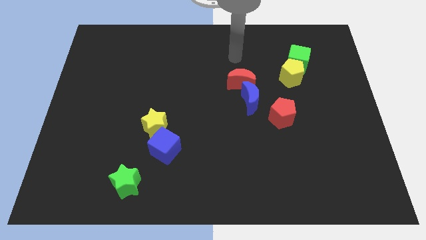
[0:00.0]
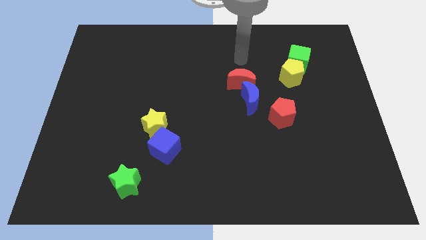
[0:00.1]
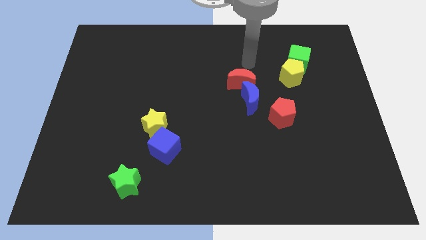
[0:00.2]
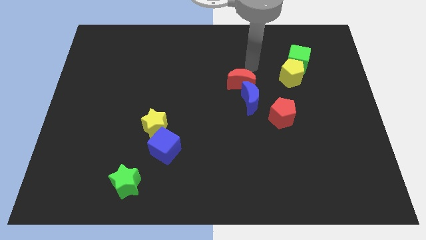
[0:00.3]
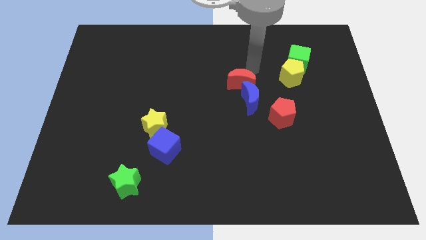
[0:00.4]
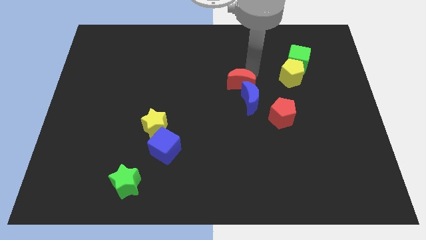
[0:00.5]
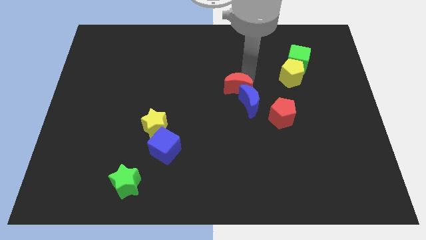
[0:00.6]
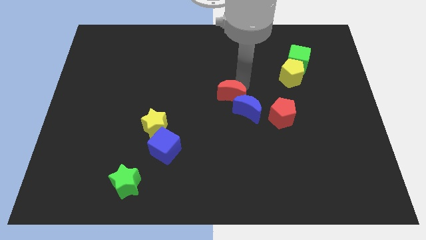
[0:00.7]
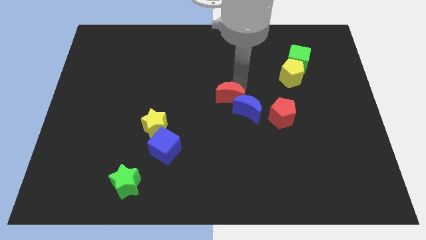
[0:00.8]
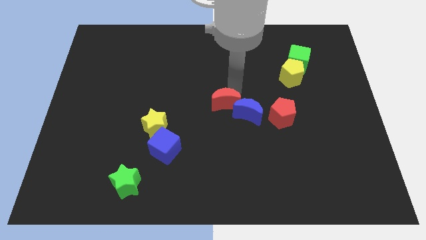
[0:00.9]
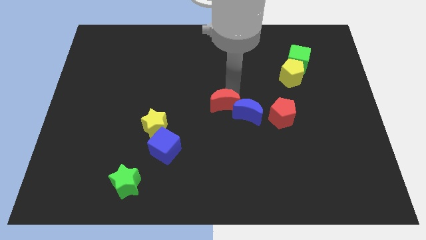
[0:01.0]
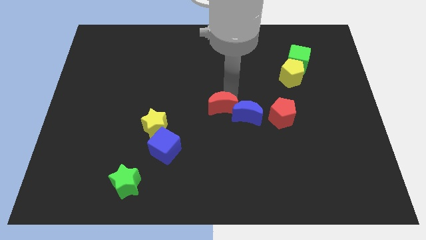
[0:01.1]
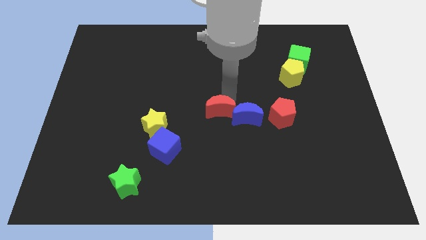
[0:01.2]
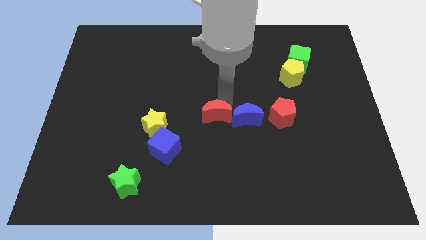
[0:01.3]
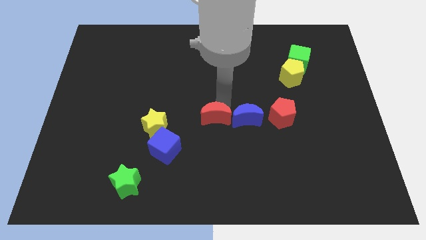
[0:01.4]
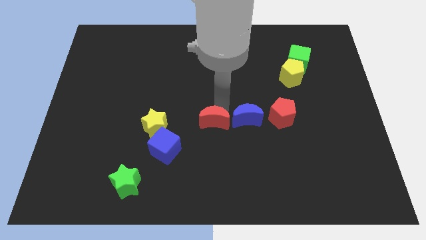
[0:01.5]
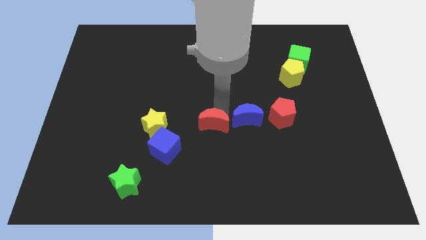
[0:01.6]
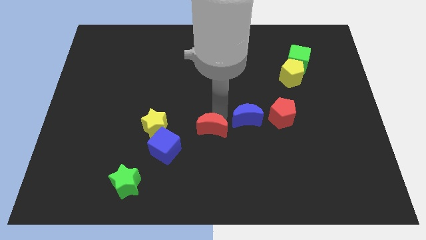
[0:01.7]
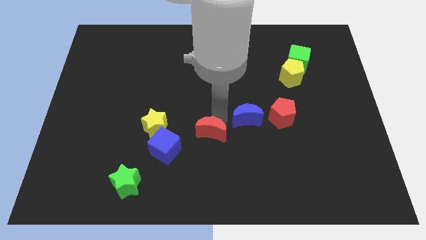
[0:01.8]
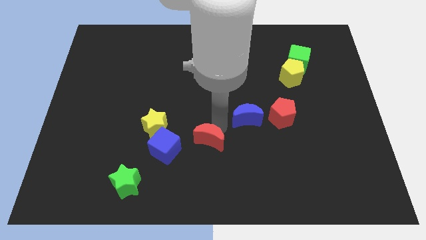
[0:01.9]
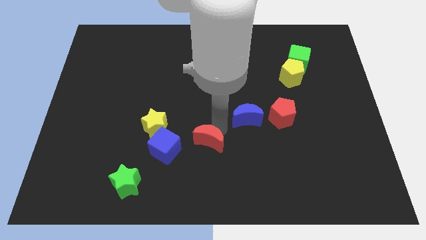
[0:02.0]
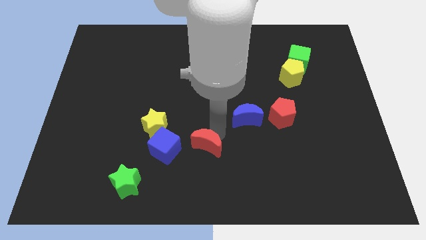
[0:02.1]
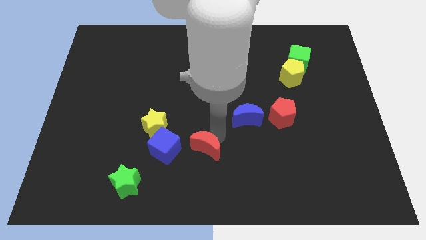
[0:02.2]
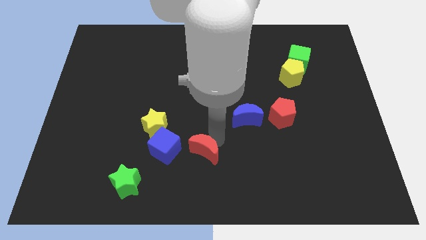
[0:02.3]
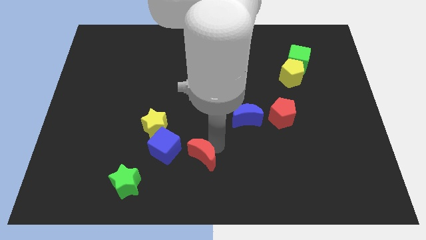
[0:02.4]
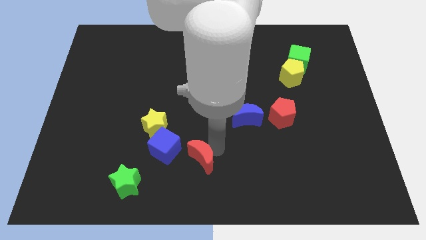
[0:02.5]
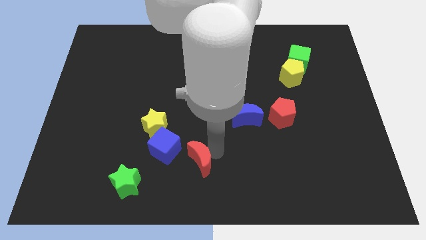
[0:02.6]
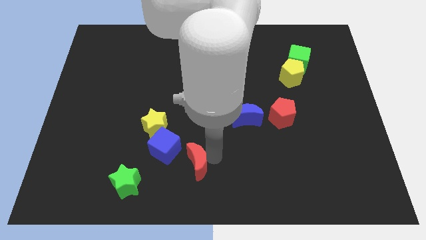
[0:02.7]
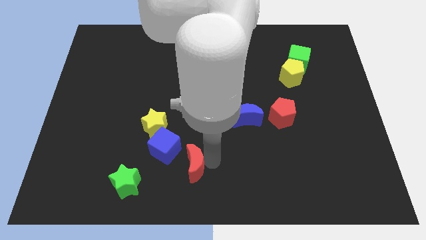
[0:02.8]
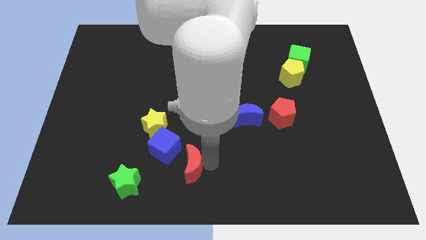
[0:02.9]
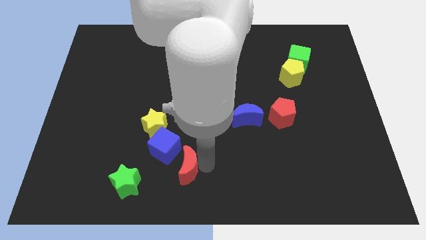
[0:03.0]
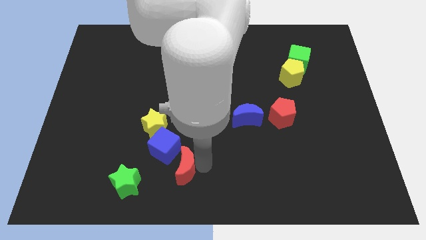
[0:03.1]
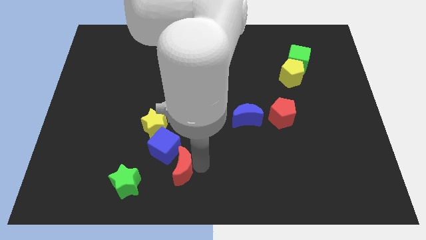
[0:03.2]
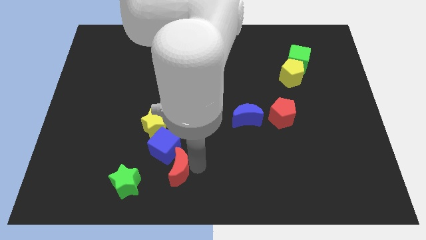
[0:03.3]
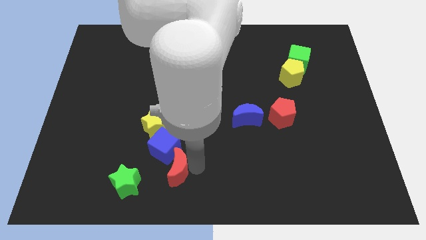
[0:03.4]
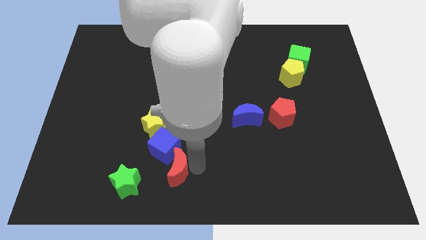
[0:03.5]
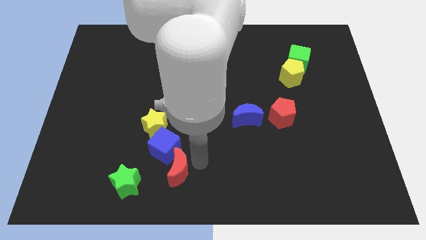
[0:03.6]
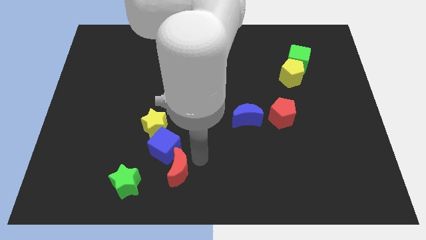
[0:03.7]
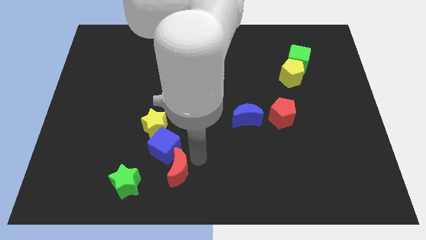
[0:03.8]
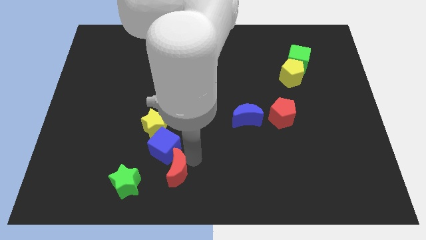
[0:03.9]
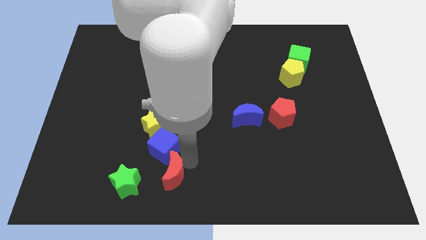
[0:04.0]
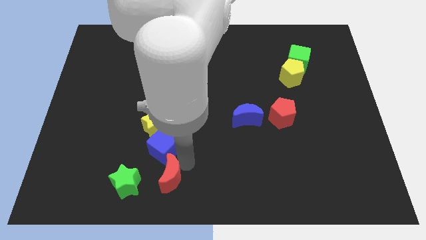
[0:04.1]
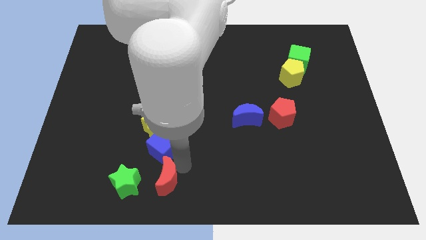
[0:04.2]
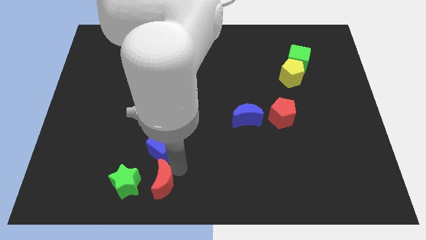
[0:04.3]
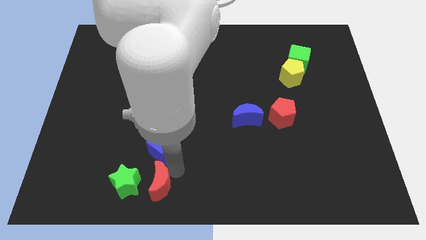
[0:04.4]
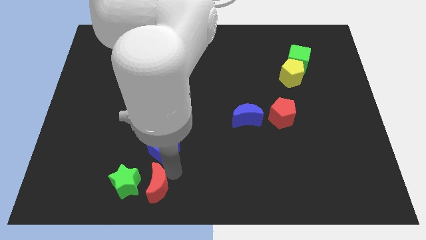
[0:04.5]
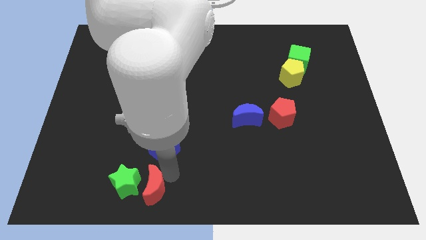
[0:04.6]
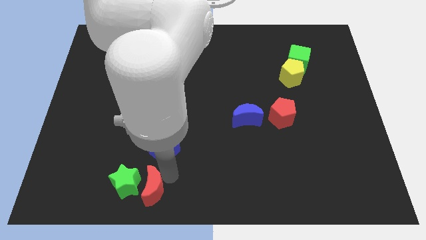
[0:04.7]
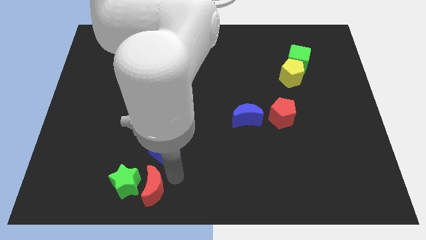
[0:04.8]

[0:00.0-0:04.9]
push the red moon to the green star

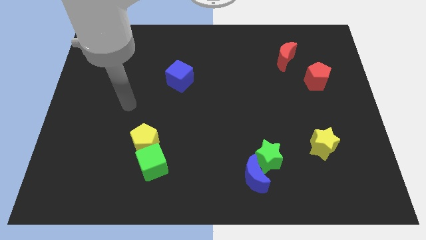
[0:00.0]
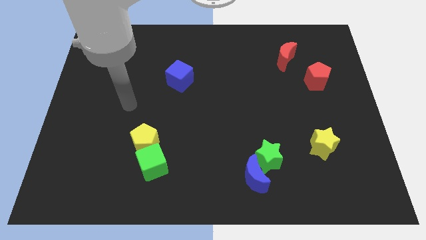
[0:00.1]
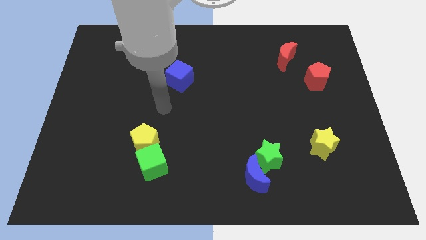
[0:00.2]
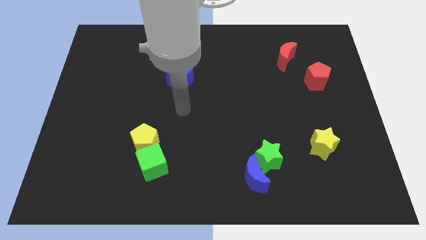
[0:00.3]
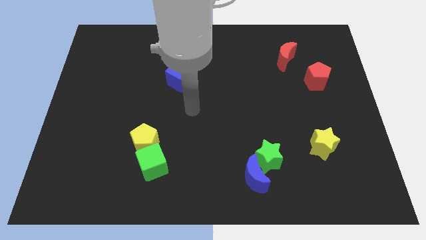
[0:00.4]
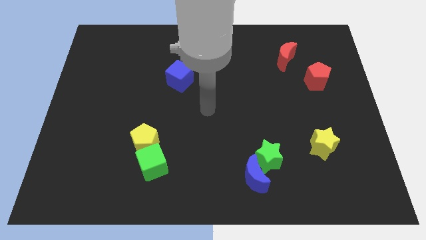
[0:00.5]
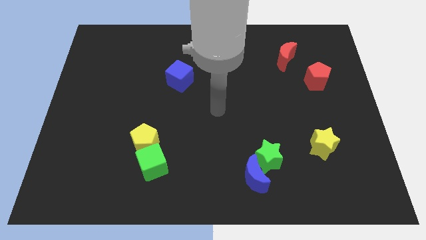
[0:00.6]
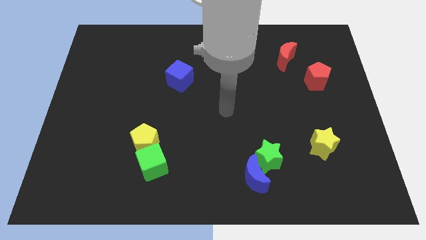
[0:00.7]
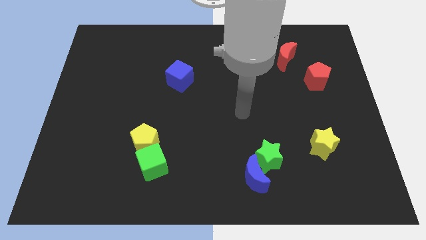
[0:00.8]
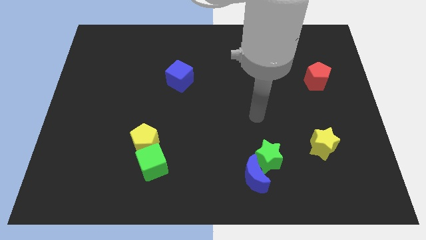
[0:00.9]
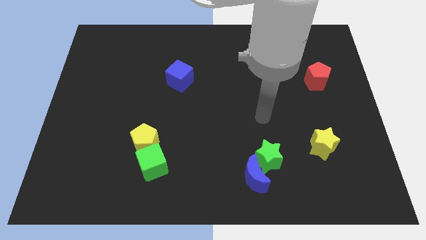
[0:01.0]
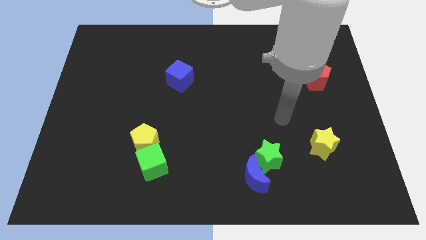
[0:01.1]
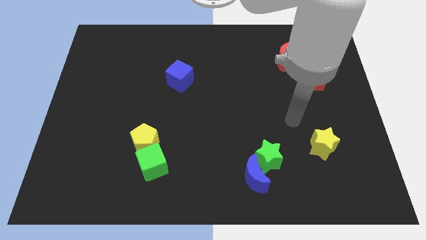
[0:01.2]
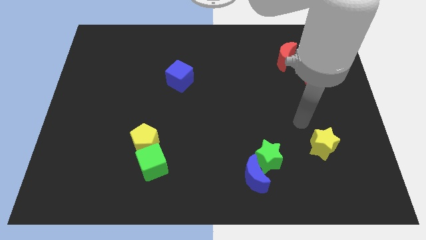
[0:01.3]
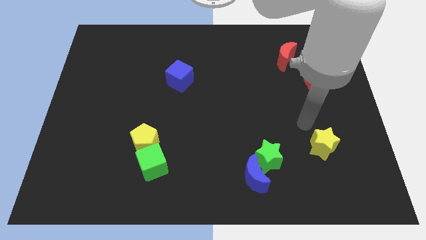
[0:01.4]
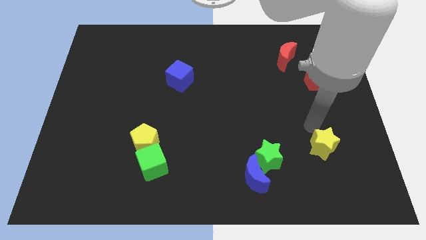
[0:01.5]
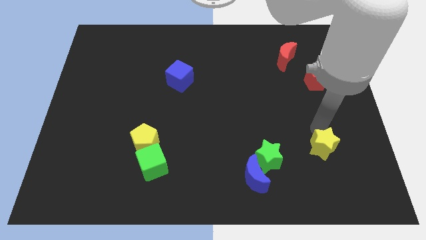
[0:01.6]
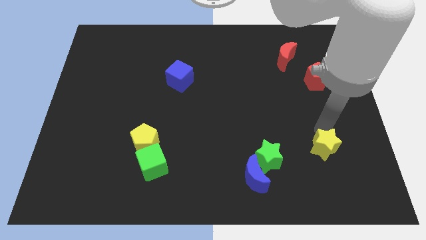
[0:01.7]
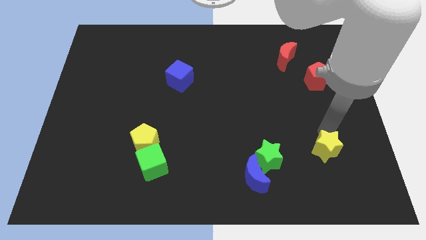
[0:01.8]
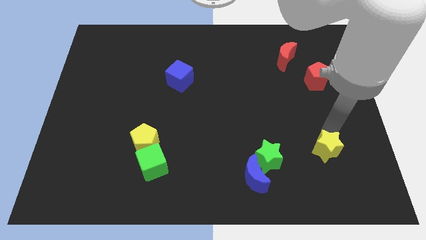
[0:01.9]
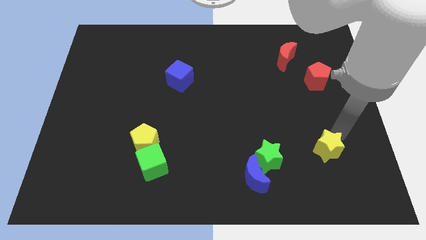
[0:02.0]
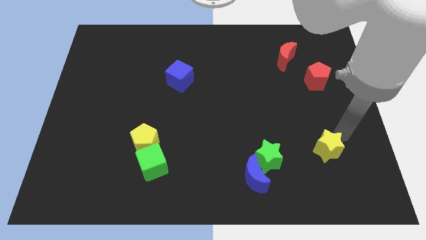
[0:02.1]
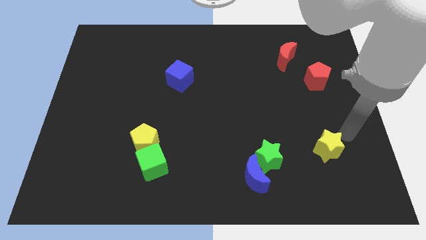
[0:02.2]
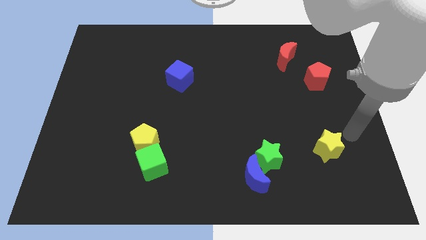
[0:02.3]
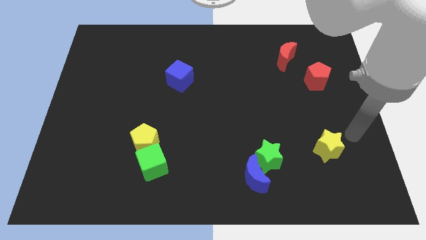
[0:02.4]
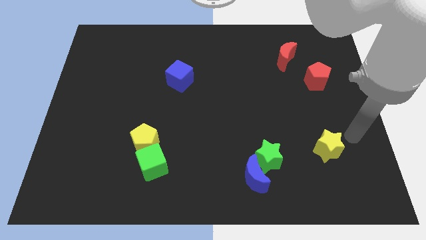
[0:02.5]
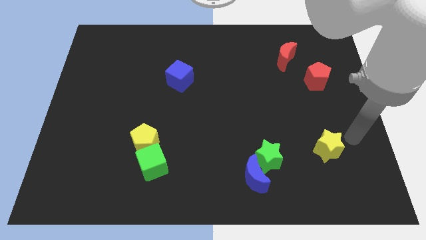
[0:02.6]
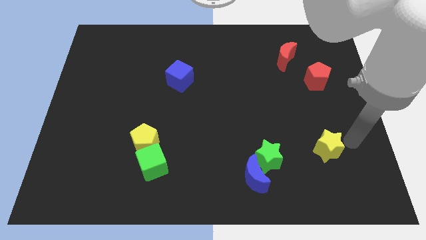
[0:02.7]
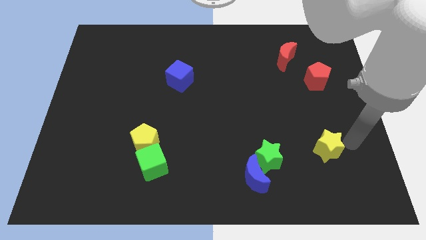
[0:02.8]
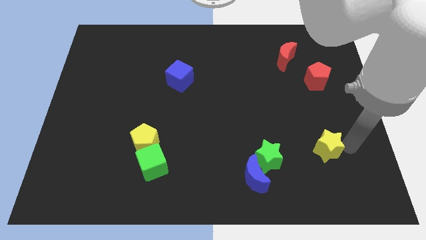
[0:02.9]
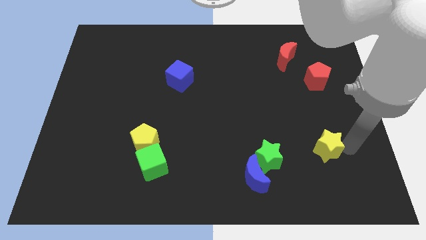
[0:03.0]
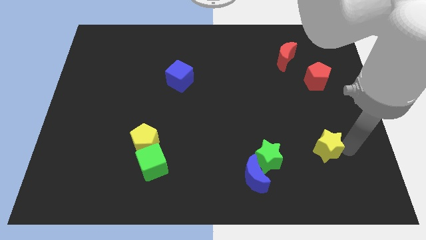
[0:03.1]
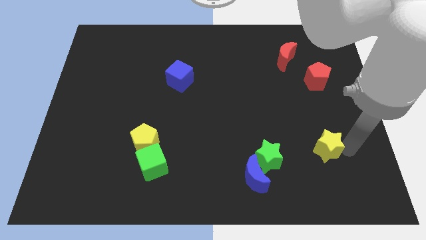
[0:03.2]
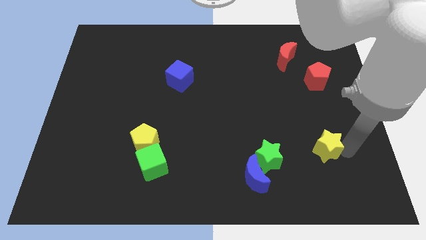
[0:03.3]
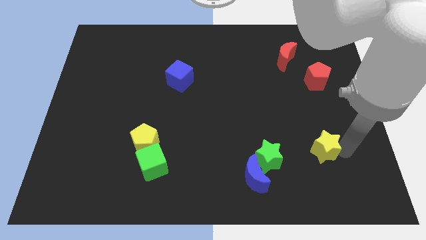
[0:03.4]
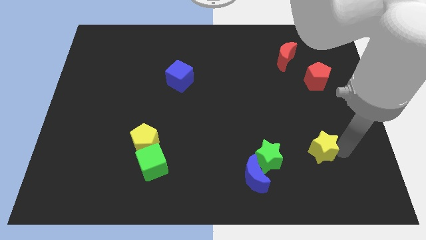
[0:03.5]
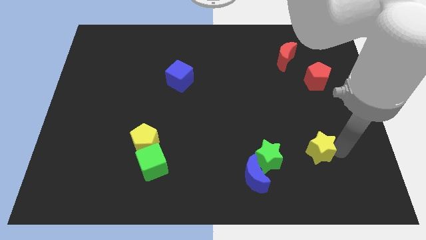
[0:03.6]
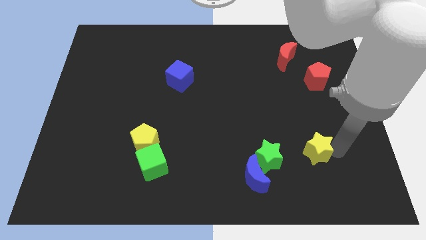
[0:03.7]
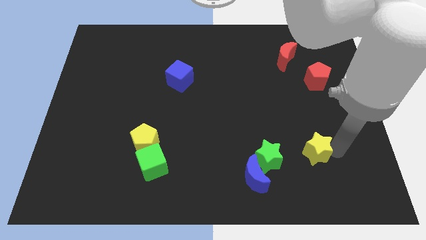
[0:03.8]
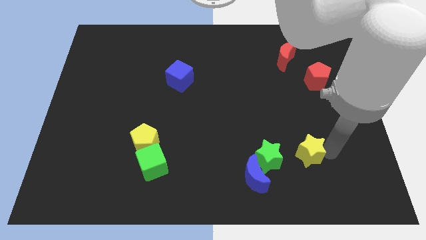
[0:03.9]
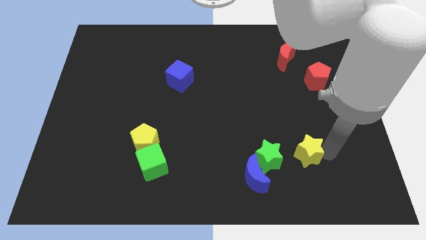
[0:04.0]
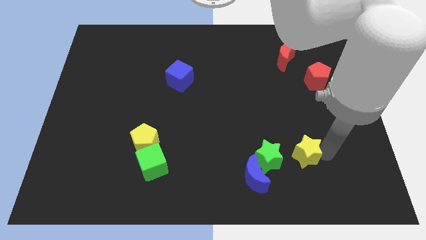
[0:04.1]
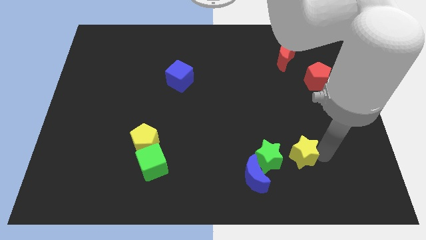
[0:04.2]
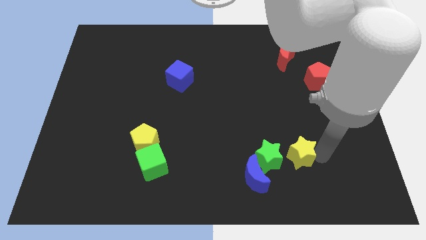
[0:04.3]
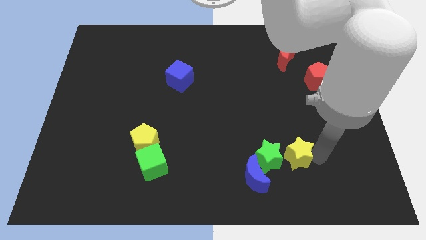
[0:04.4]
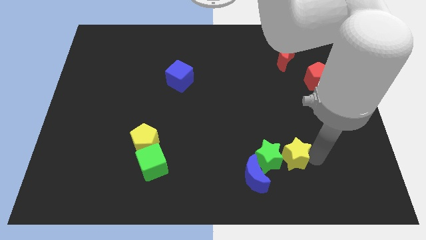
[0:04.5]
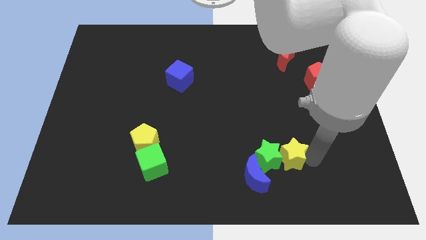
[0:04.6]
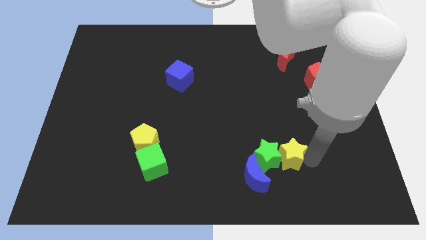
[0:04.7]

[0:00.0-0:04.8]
push the yellow star next to the green star
